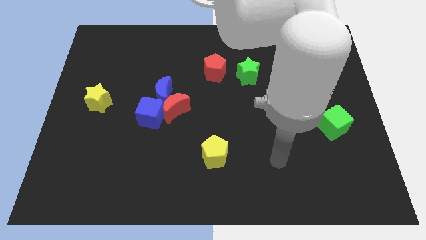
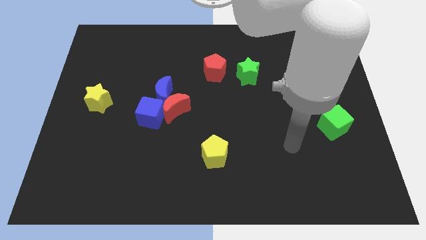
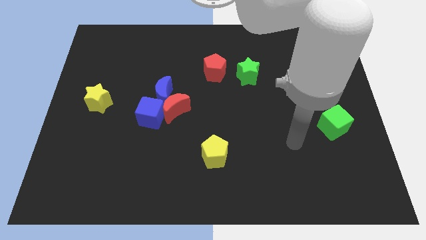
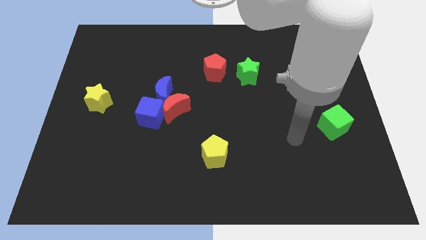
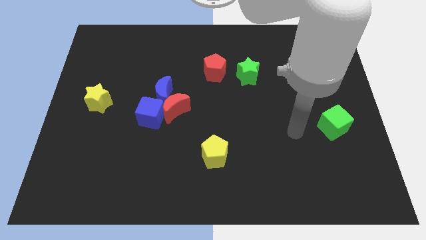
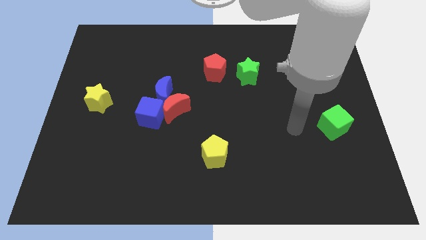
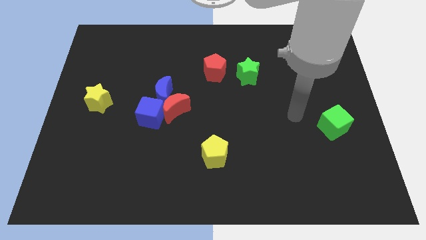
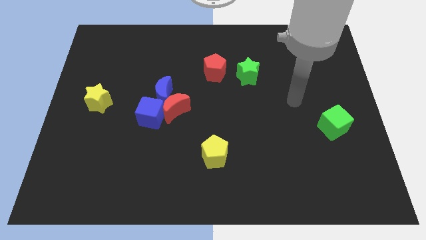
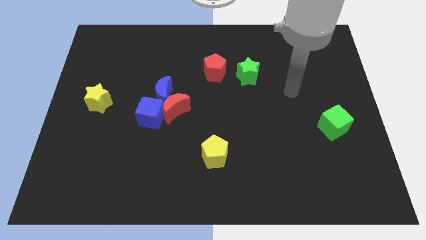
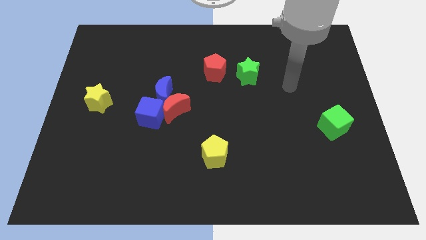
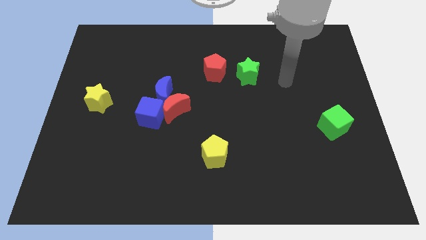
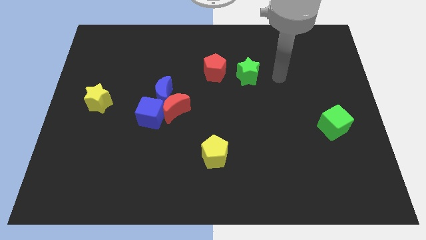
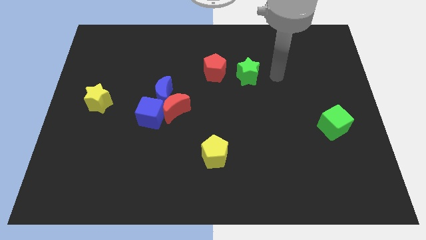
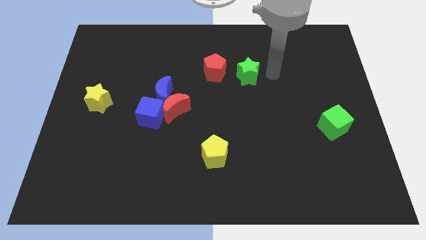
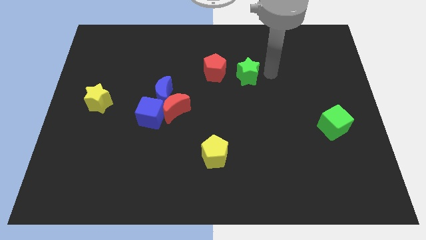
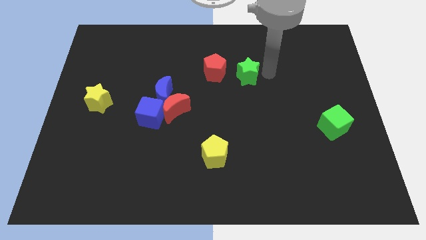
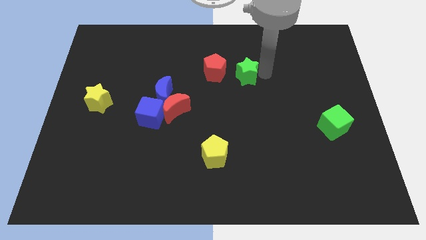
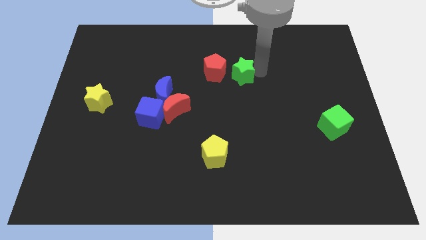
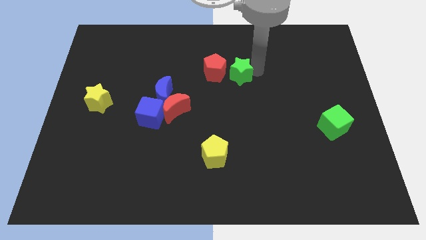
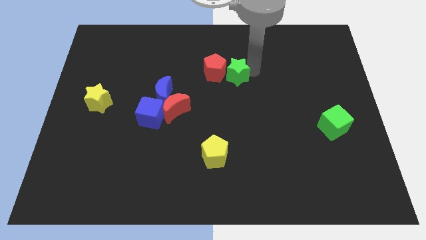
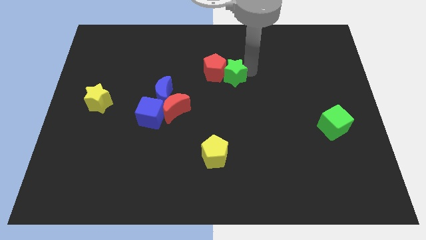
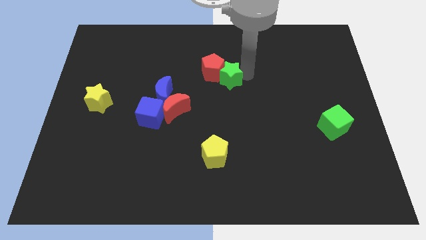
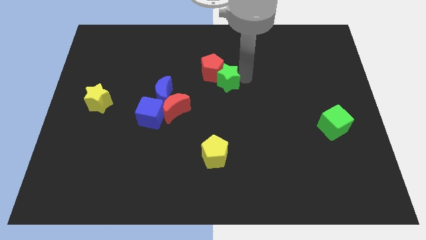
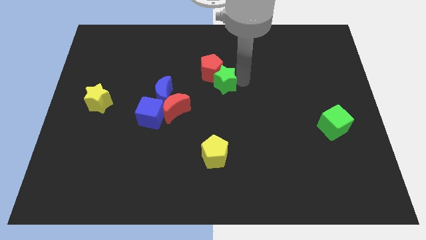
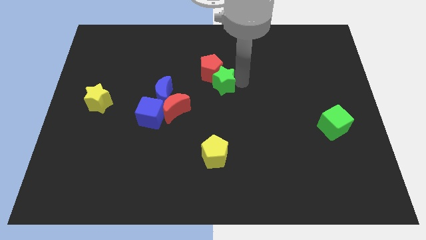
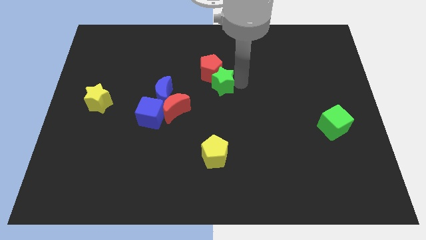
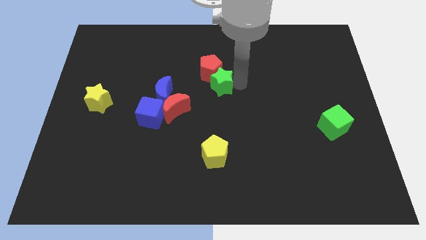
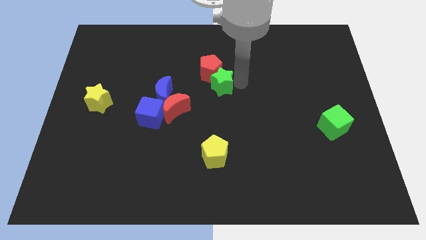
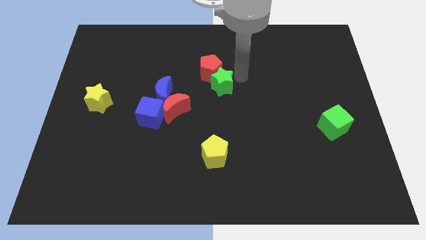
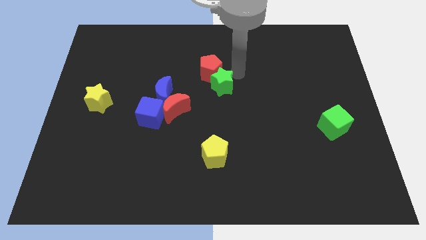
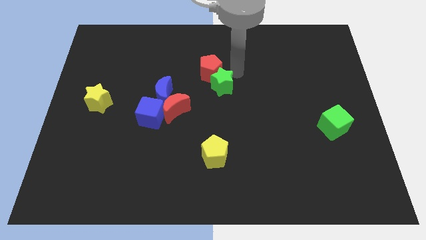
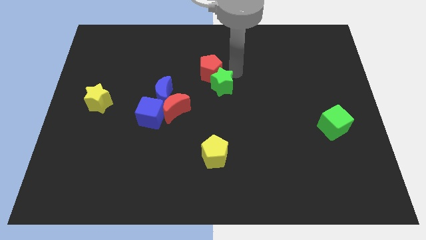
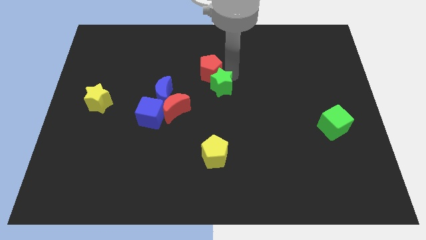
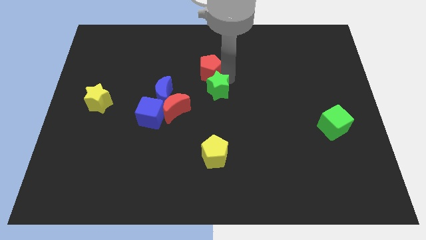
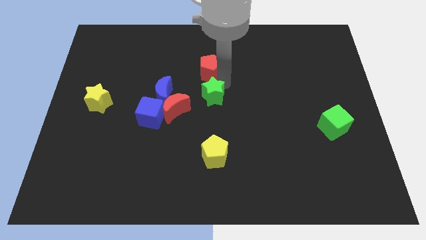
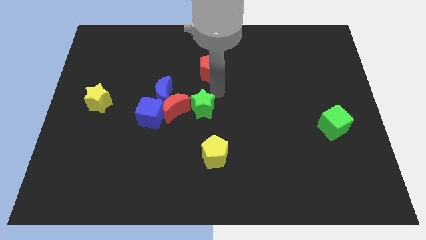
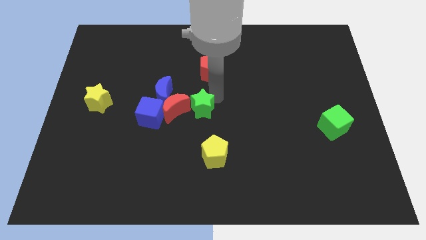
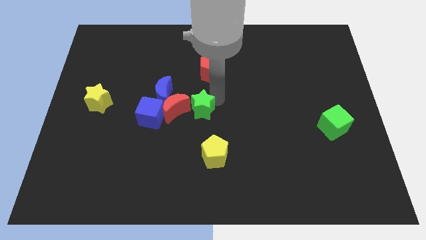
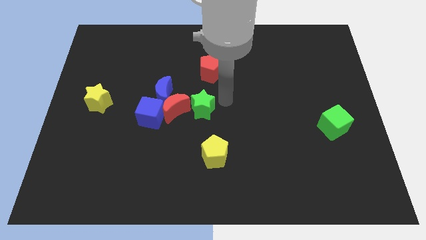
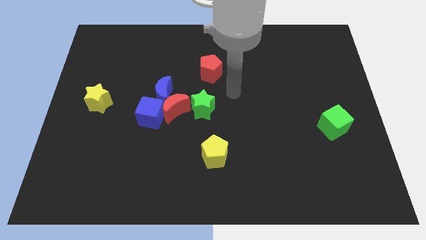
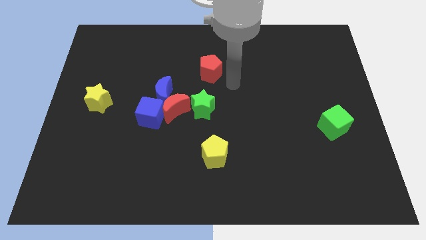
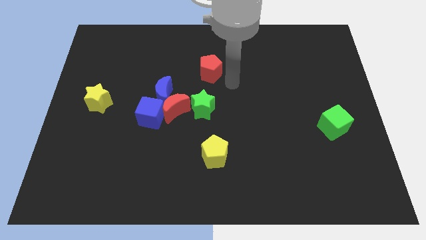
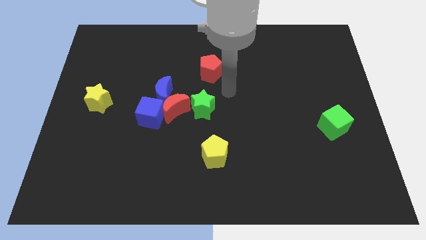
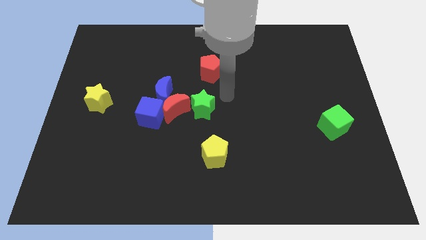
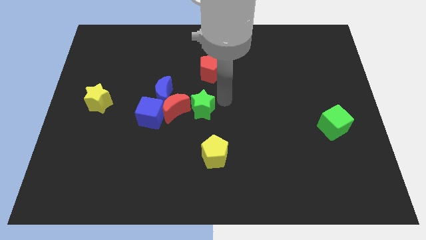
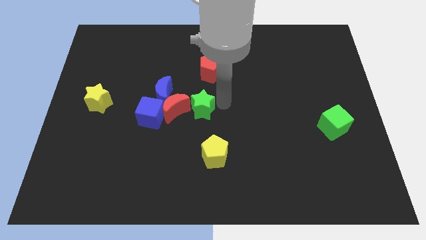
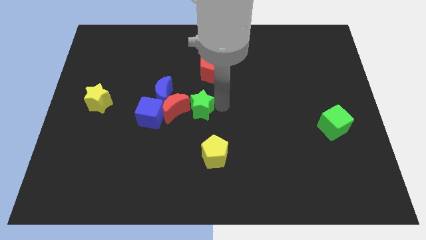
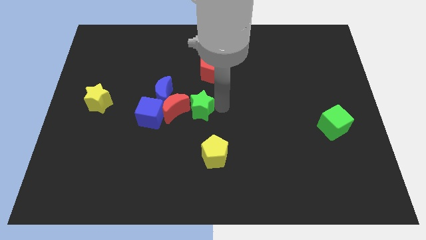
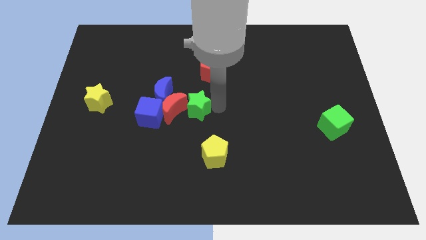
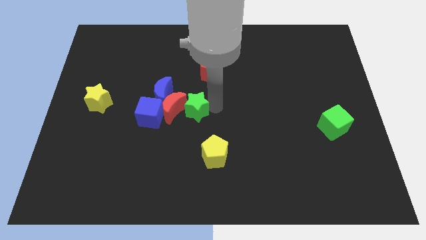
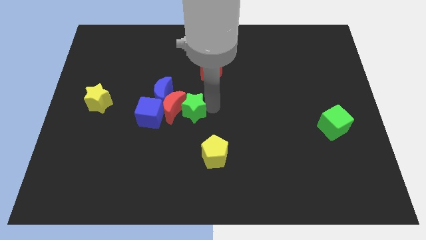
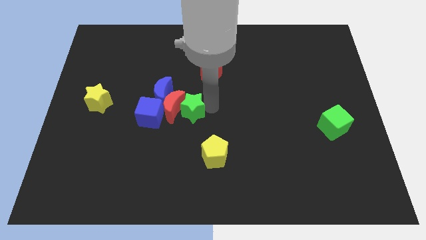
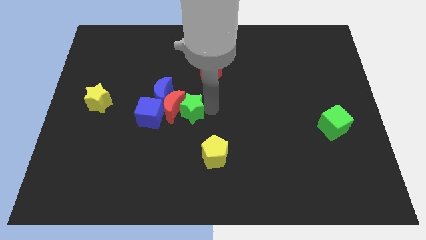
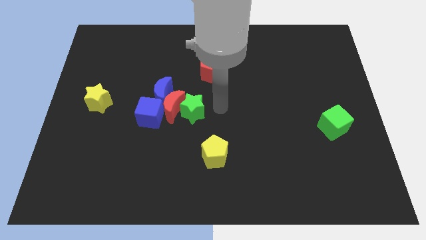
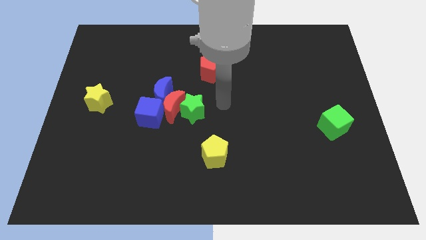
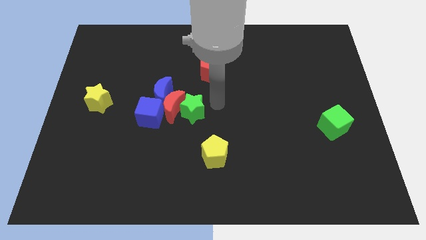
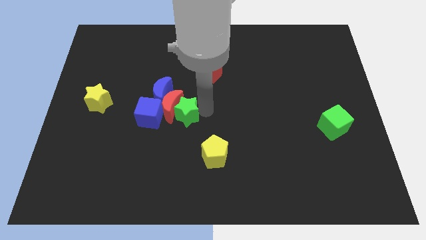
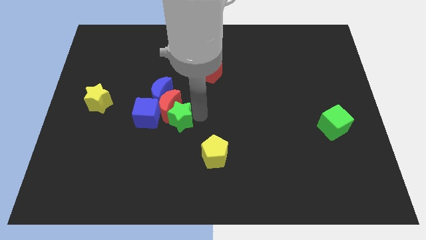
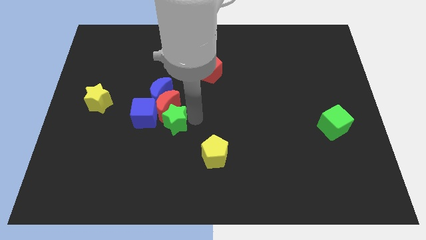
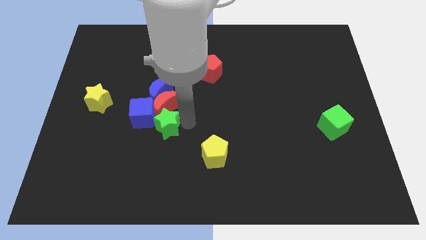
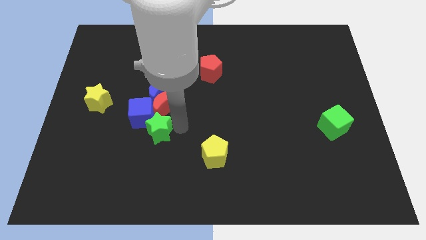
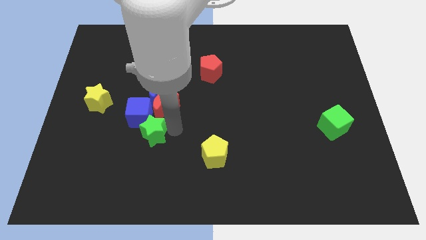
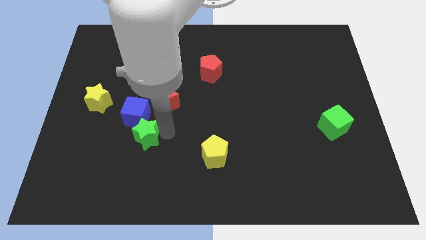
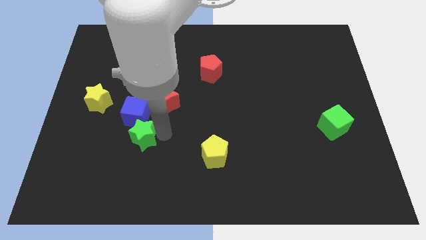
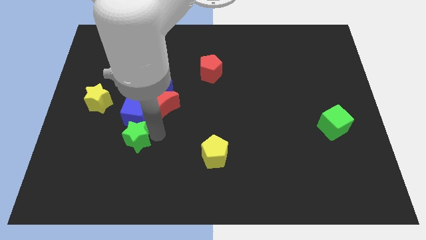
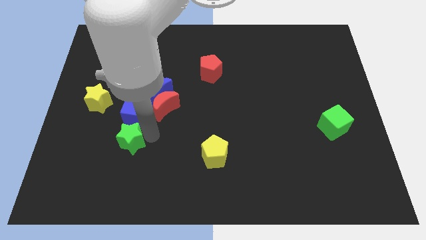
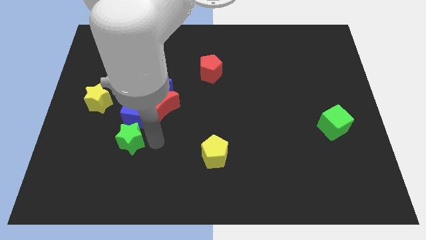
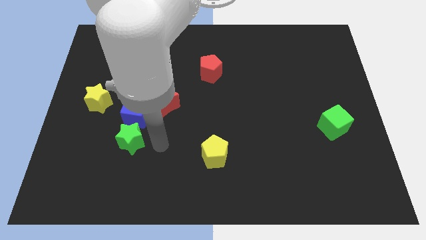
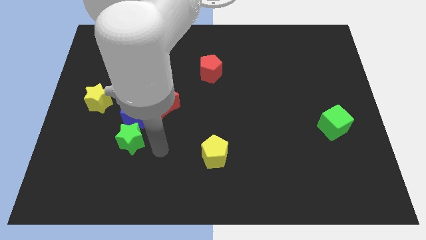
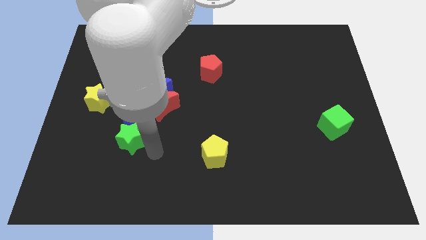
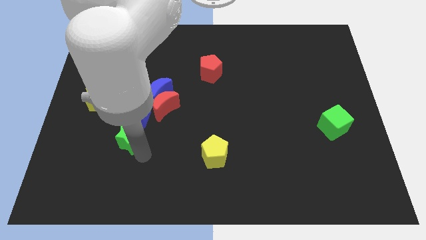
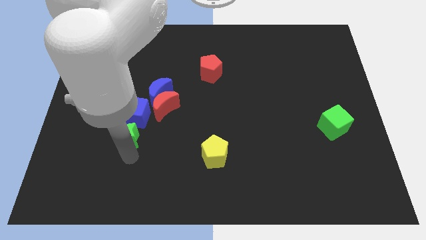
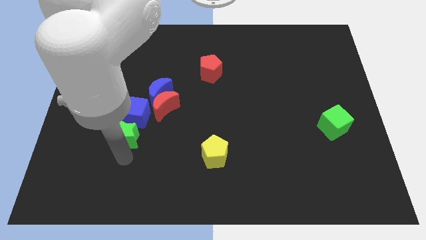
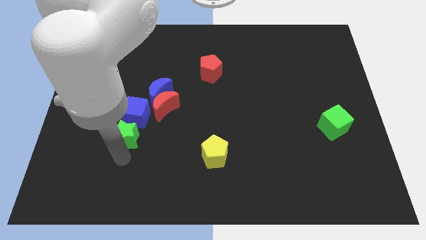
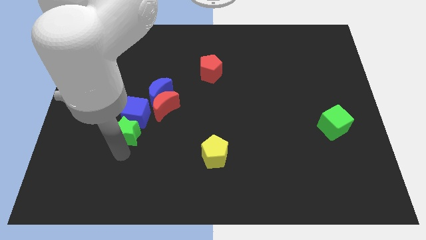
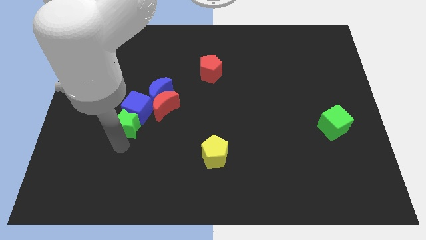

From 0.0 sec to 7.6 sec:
move the green star close to the blue cube

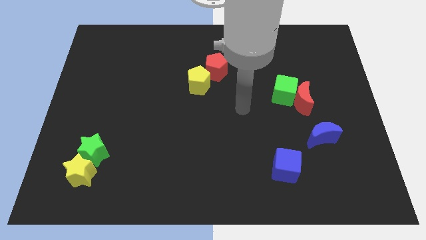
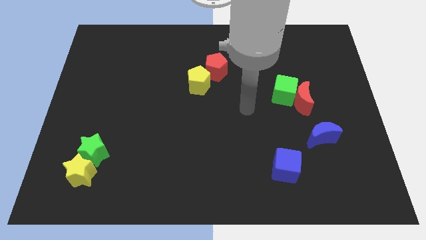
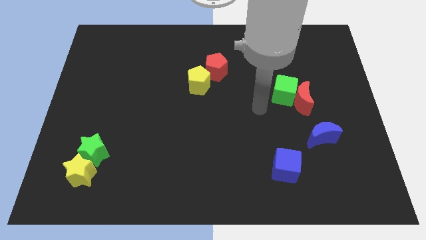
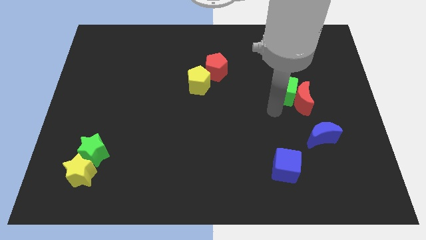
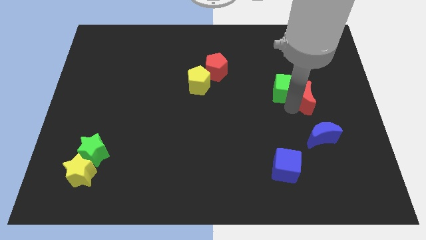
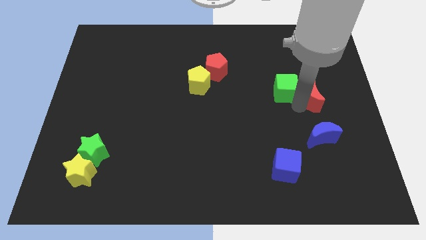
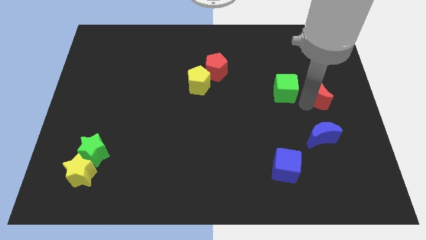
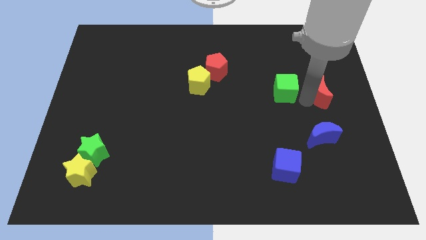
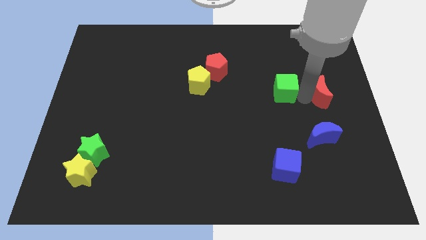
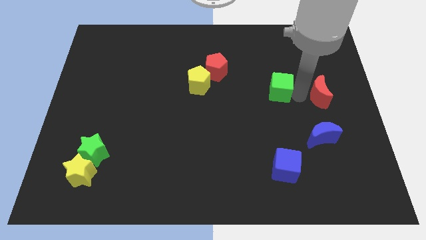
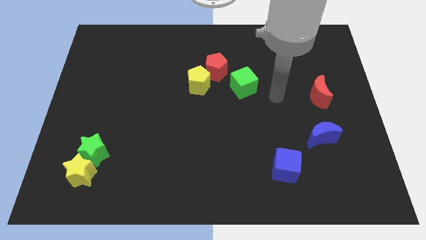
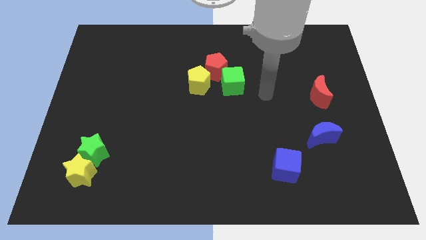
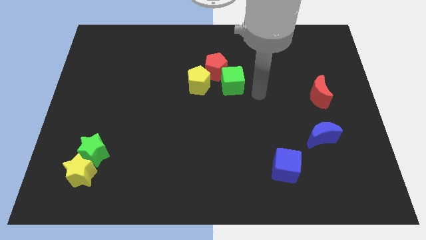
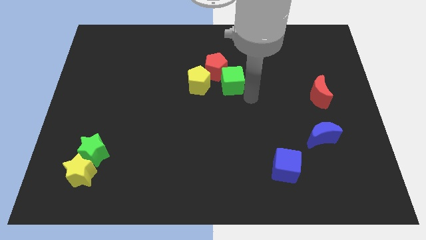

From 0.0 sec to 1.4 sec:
move the green cube close to the red pentagon
